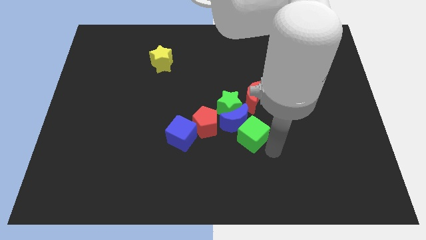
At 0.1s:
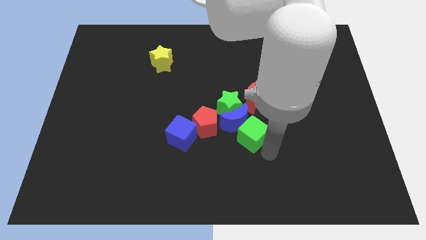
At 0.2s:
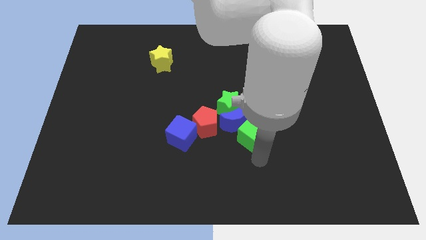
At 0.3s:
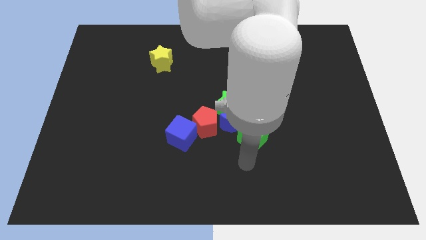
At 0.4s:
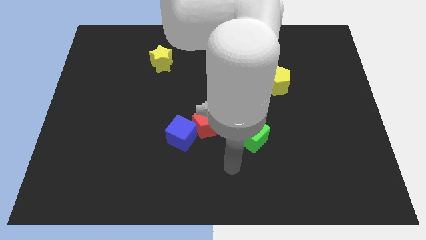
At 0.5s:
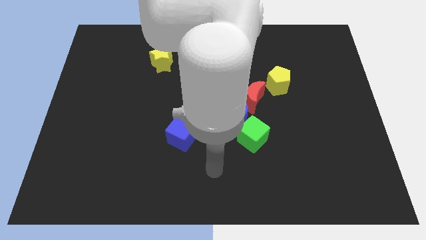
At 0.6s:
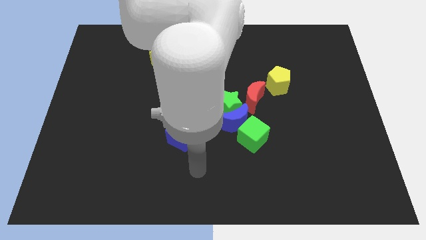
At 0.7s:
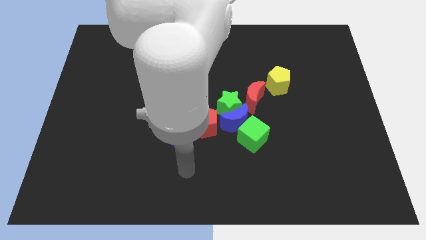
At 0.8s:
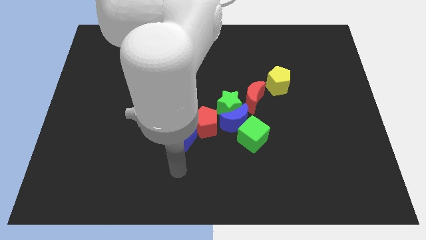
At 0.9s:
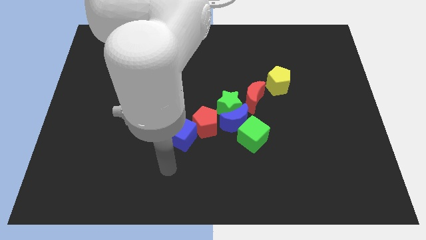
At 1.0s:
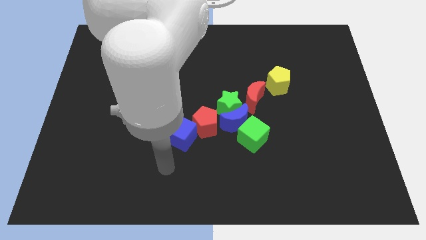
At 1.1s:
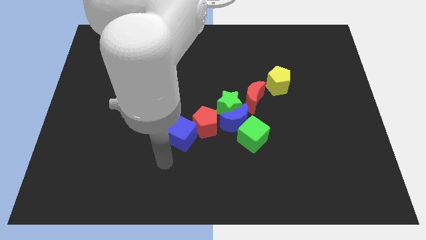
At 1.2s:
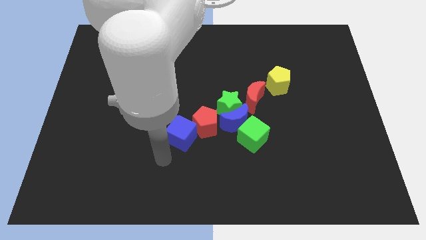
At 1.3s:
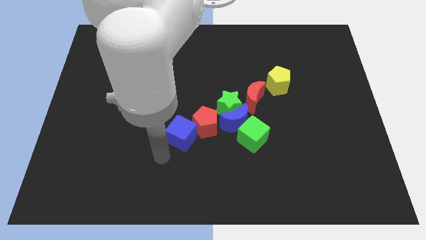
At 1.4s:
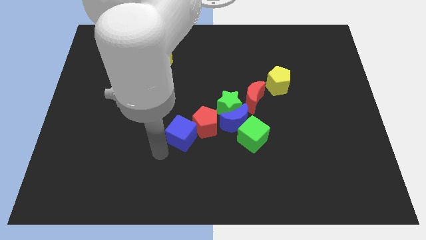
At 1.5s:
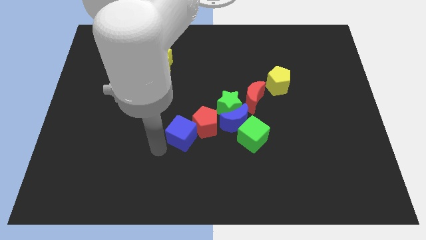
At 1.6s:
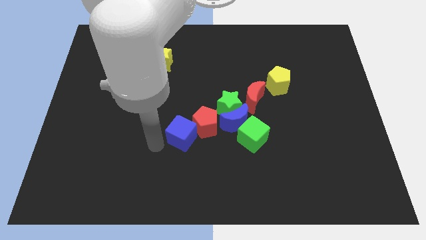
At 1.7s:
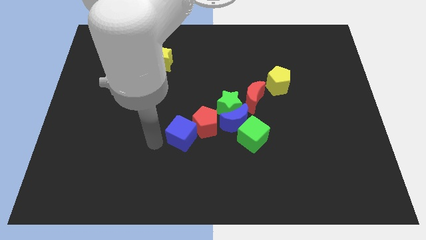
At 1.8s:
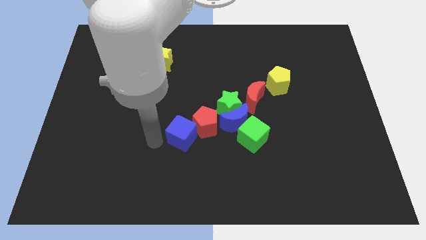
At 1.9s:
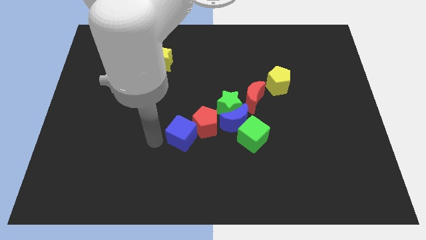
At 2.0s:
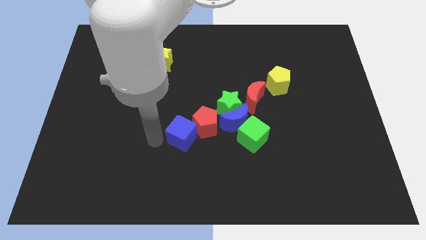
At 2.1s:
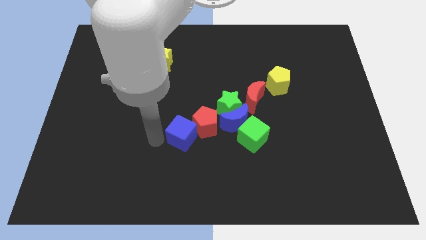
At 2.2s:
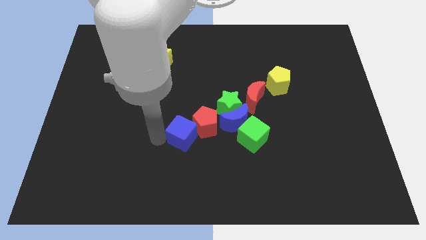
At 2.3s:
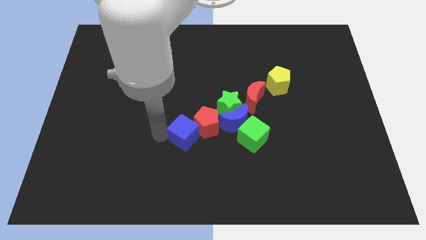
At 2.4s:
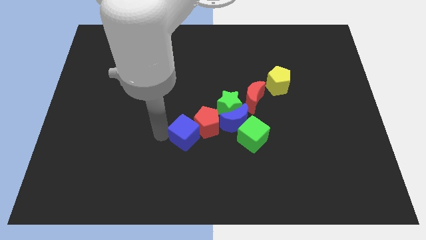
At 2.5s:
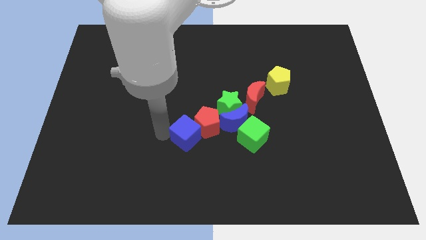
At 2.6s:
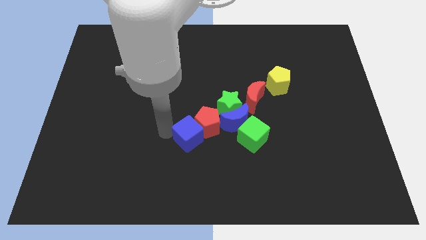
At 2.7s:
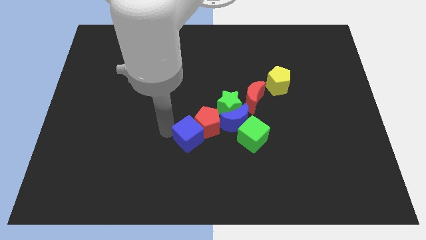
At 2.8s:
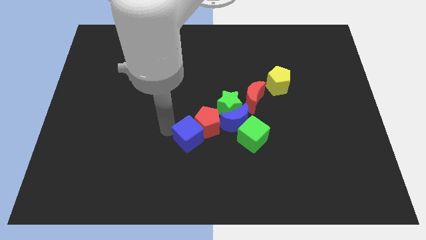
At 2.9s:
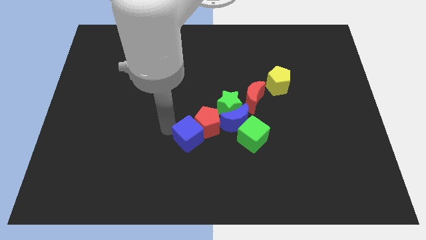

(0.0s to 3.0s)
slightly push the blue cube and red pentagon towards the center of the board

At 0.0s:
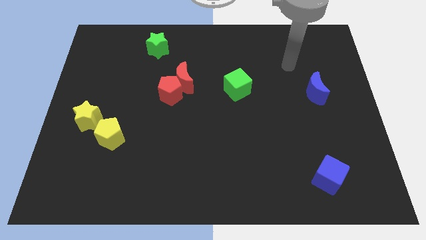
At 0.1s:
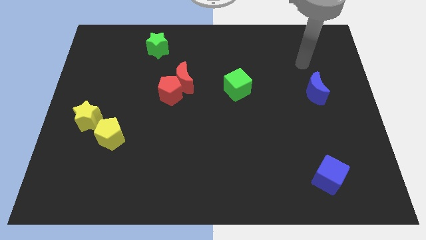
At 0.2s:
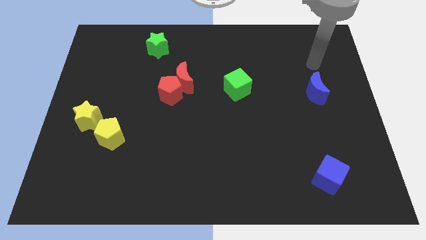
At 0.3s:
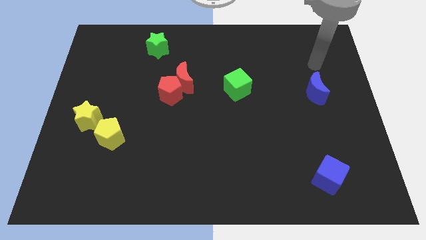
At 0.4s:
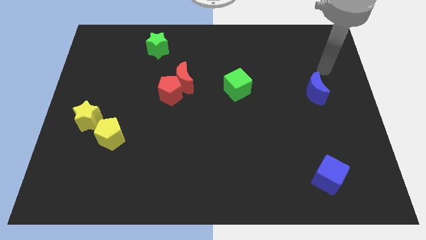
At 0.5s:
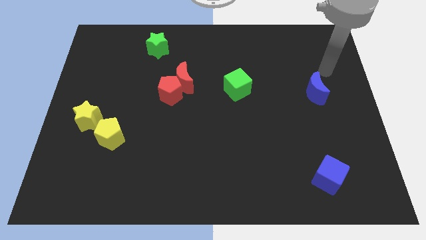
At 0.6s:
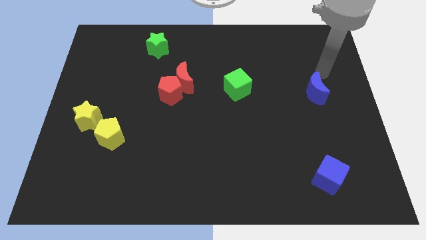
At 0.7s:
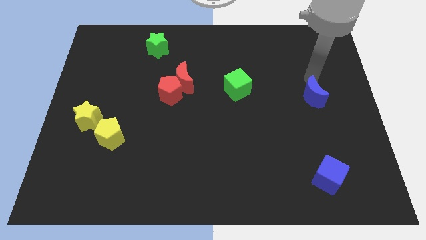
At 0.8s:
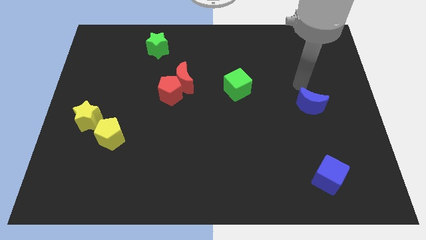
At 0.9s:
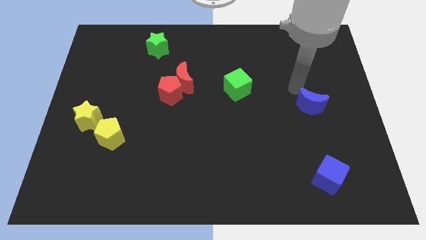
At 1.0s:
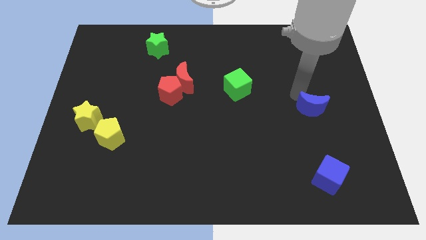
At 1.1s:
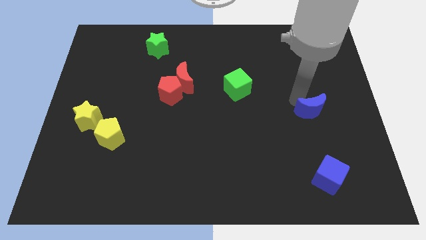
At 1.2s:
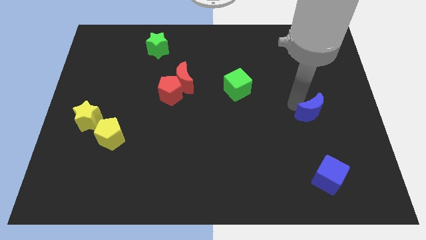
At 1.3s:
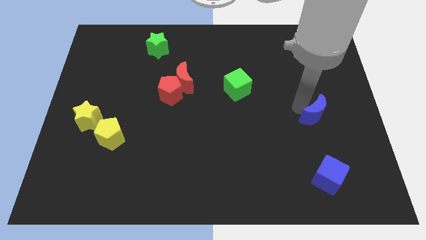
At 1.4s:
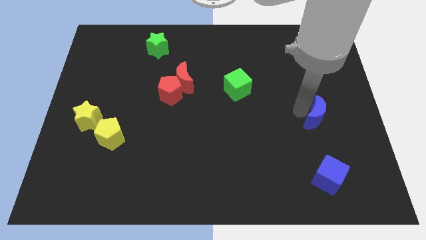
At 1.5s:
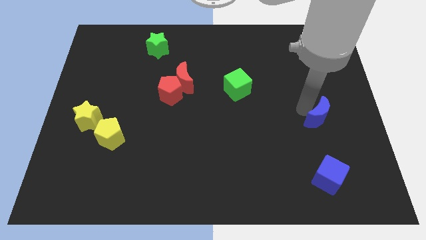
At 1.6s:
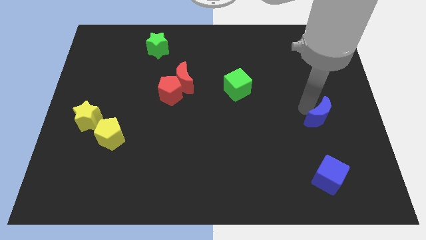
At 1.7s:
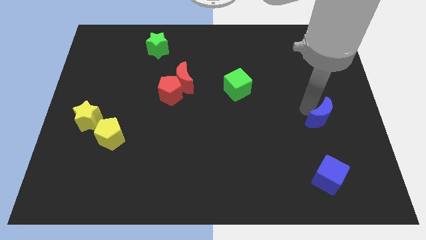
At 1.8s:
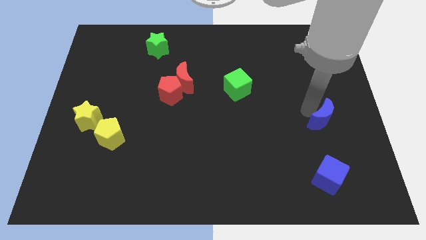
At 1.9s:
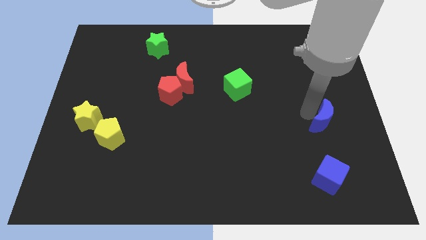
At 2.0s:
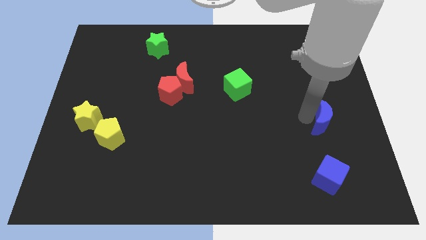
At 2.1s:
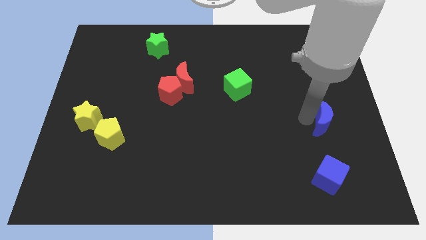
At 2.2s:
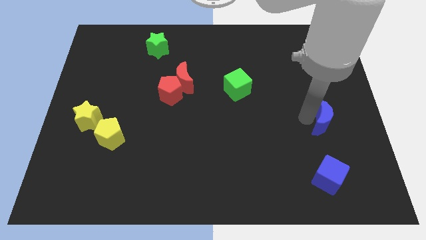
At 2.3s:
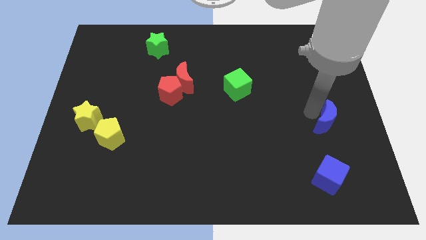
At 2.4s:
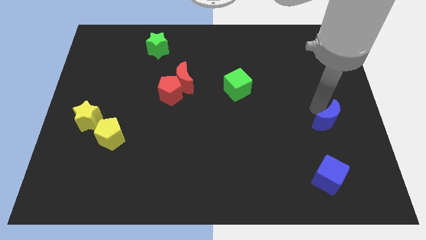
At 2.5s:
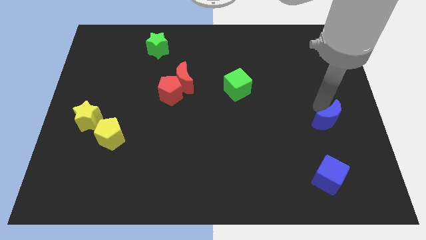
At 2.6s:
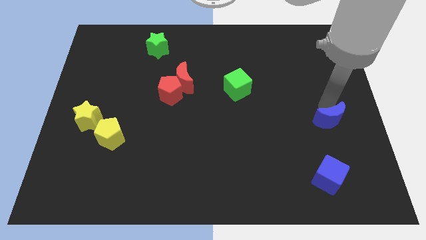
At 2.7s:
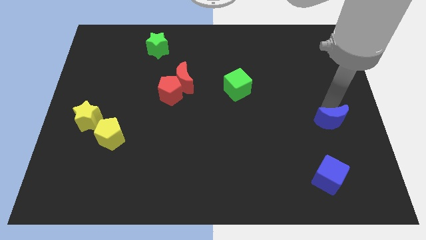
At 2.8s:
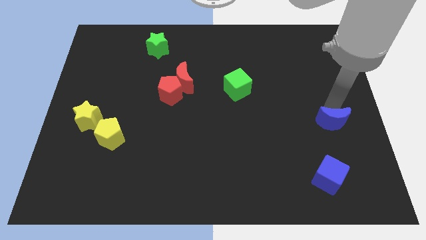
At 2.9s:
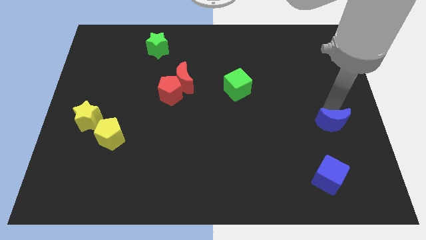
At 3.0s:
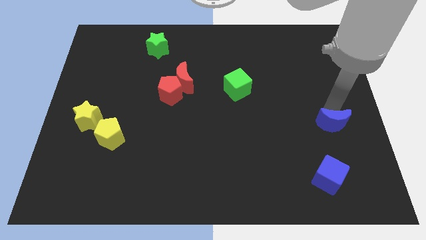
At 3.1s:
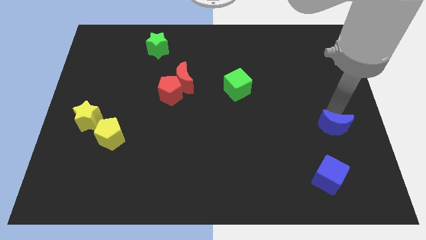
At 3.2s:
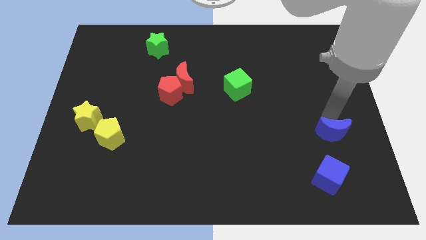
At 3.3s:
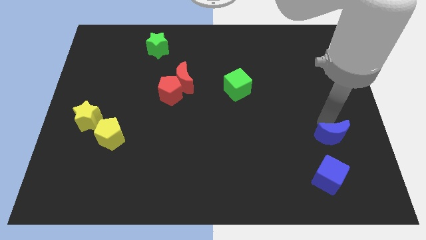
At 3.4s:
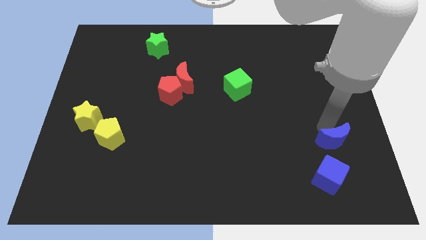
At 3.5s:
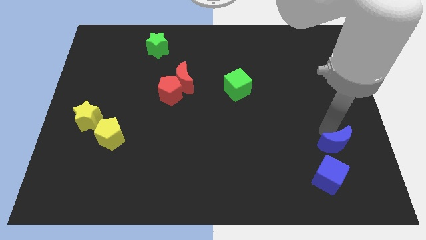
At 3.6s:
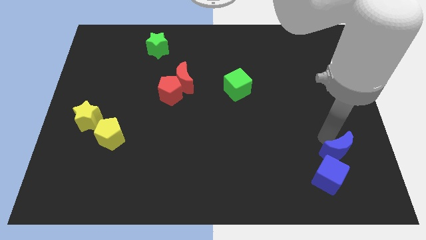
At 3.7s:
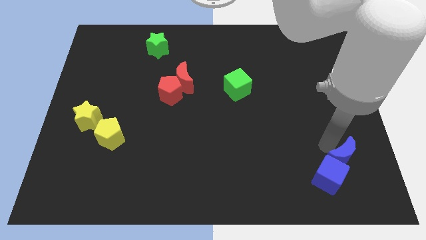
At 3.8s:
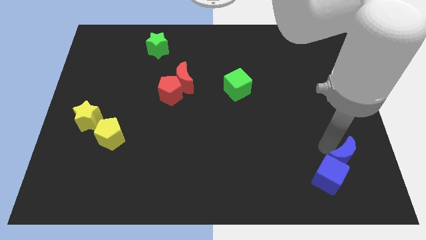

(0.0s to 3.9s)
push the blue moon above the blue cube

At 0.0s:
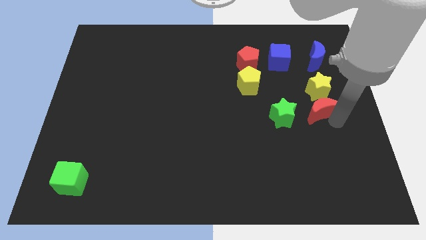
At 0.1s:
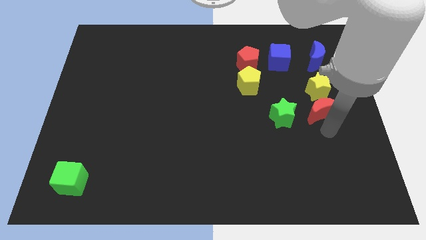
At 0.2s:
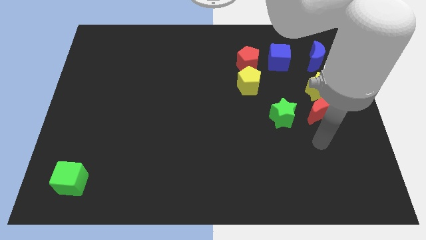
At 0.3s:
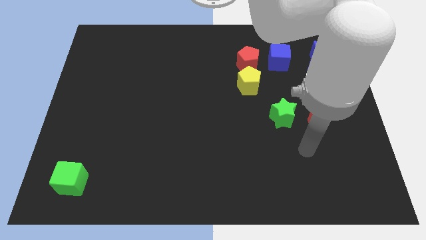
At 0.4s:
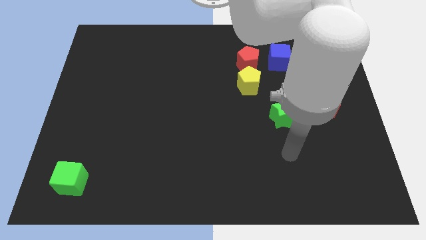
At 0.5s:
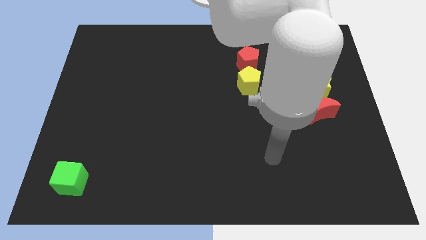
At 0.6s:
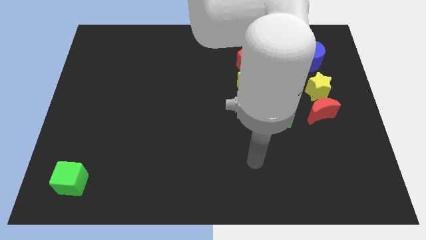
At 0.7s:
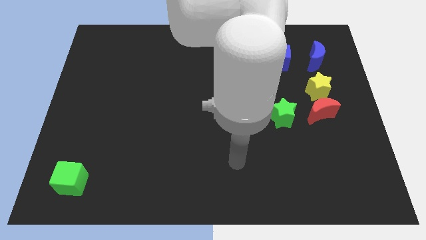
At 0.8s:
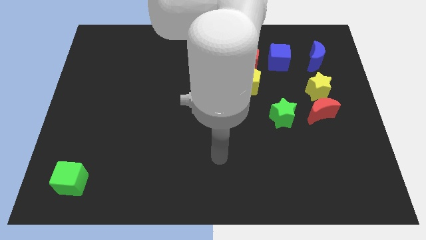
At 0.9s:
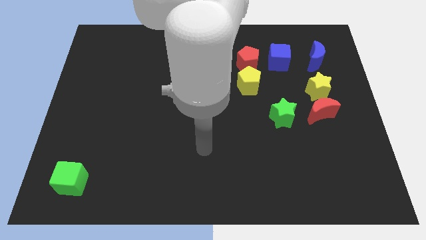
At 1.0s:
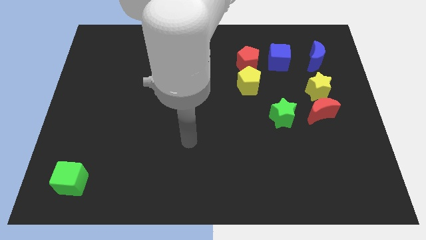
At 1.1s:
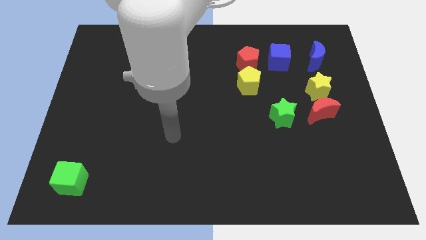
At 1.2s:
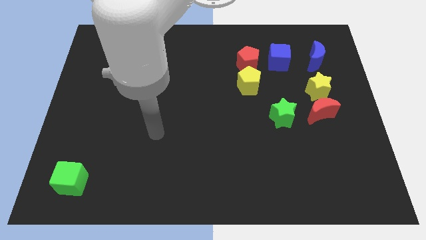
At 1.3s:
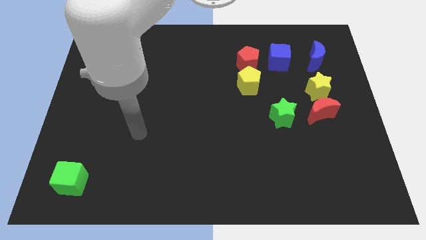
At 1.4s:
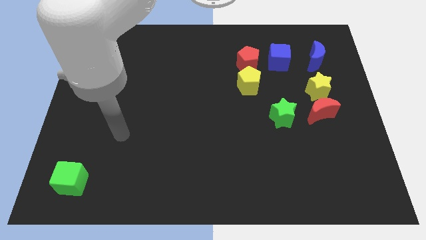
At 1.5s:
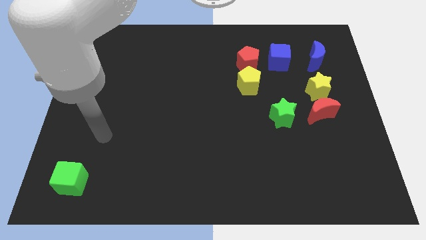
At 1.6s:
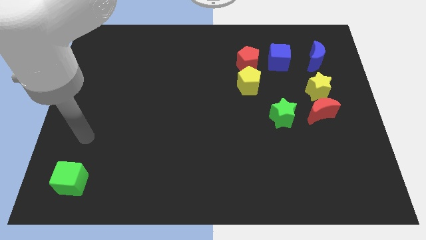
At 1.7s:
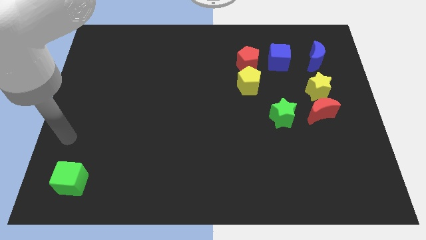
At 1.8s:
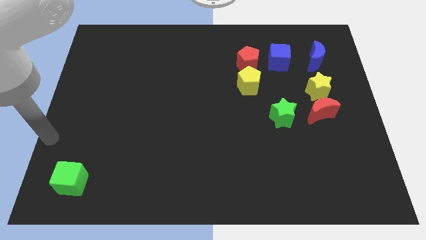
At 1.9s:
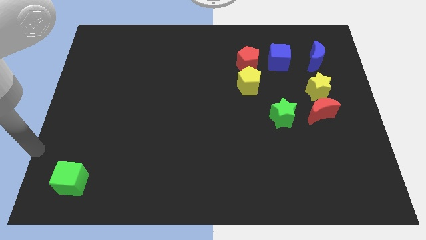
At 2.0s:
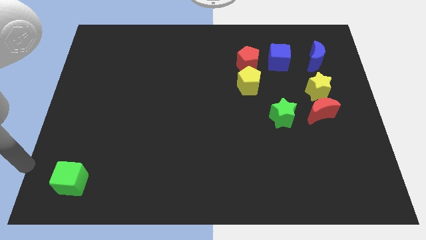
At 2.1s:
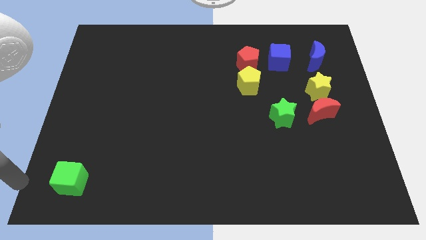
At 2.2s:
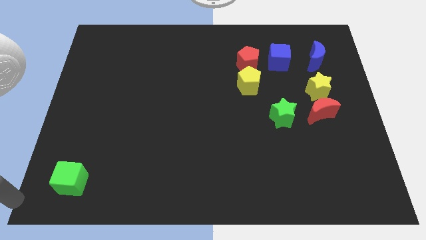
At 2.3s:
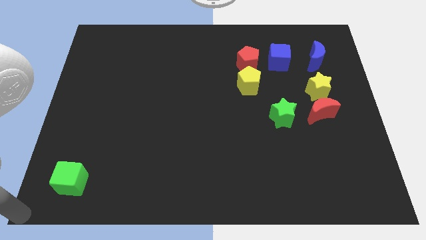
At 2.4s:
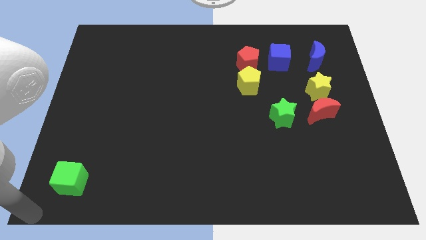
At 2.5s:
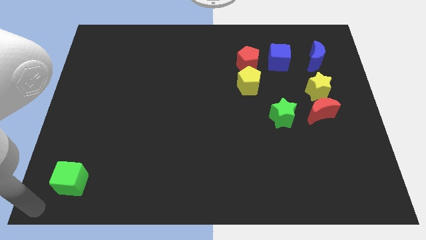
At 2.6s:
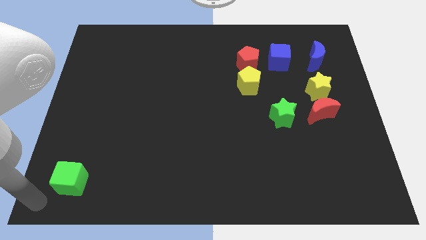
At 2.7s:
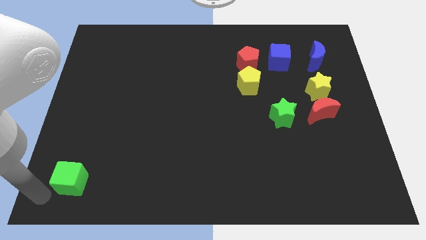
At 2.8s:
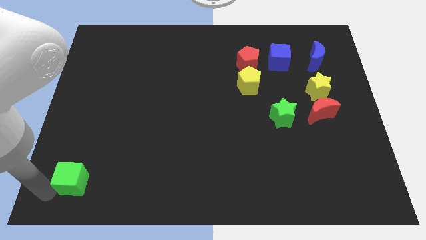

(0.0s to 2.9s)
place the arm diagonal to the green cube
